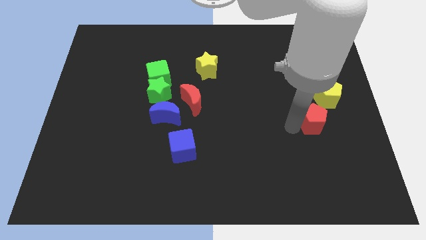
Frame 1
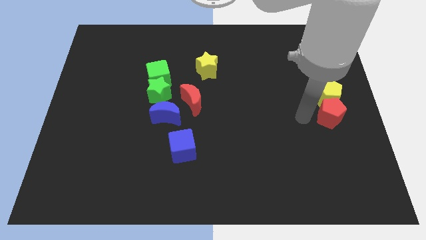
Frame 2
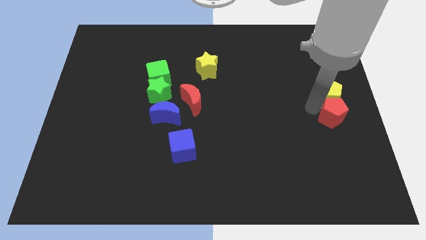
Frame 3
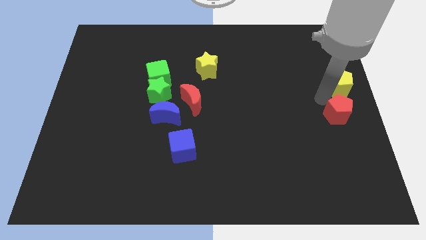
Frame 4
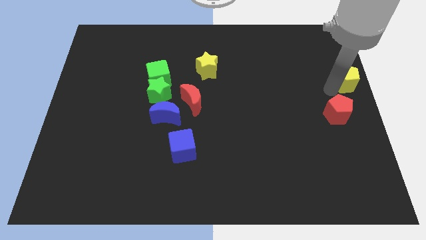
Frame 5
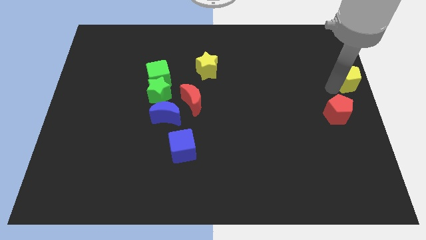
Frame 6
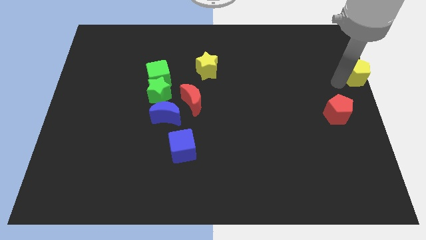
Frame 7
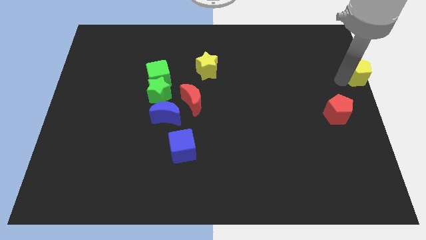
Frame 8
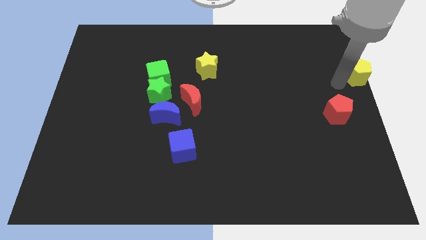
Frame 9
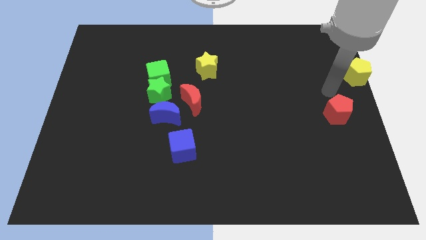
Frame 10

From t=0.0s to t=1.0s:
move the yellow pentagon parallel to the yellow star

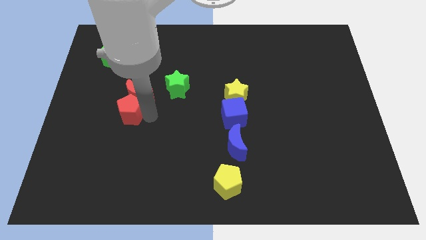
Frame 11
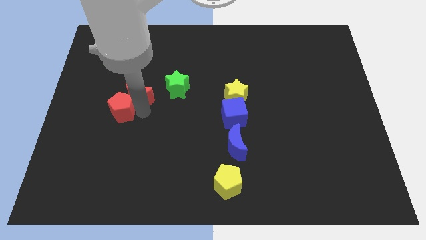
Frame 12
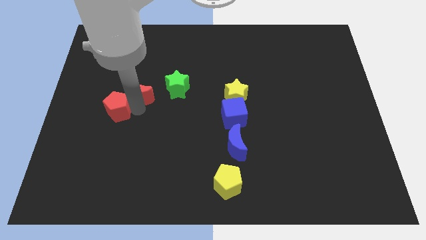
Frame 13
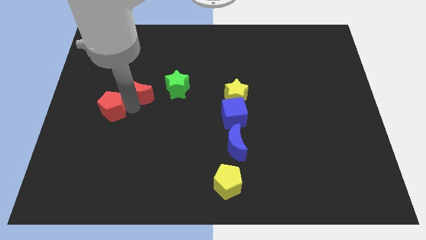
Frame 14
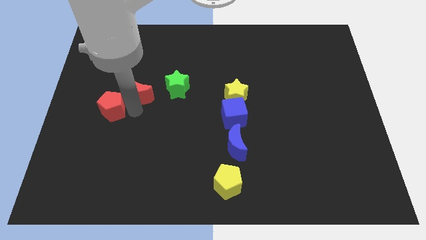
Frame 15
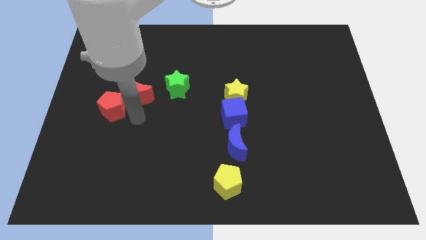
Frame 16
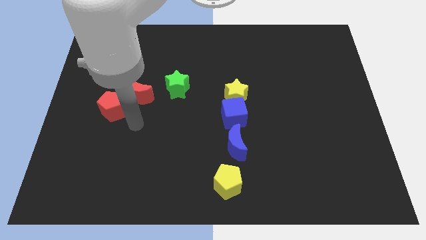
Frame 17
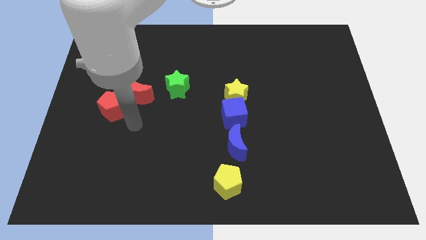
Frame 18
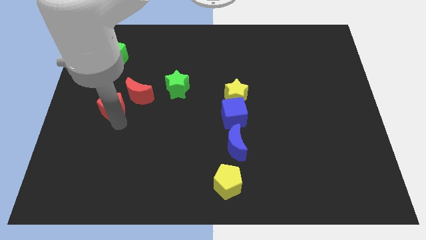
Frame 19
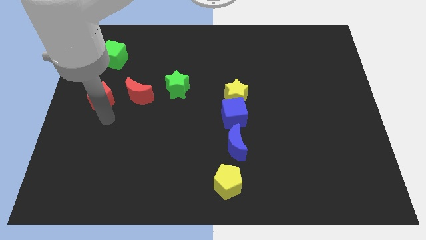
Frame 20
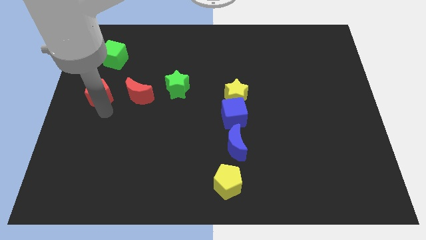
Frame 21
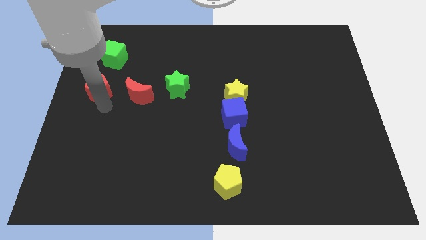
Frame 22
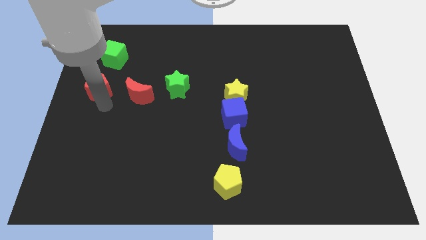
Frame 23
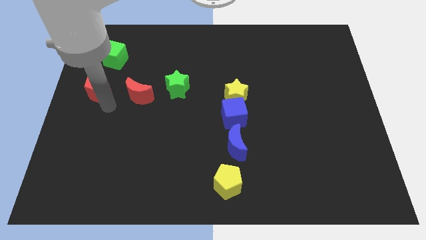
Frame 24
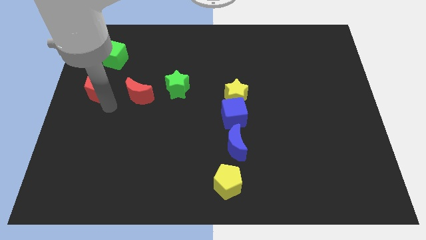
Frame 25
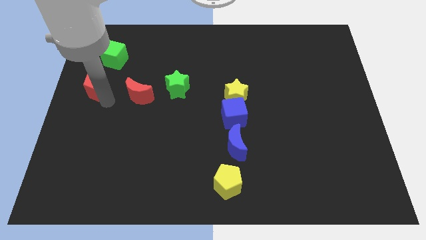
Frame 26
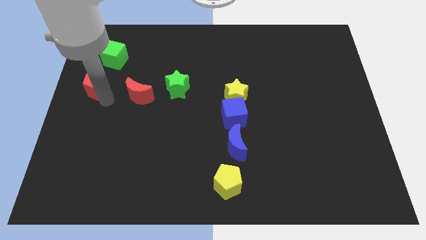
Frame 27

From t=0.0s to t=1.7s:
separate the red pentagon from the red moon

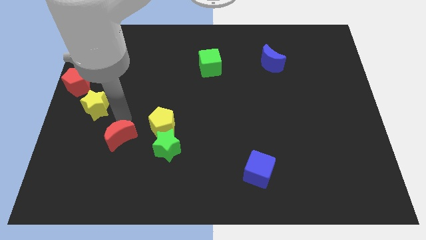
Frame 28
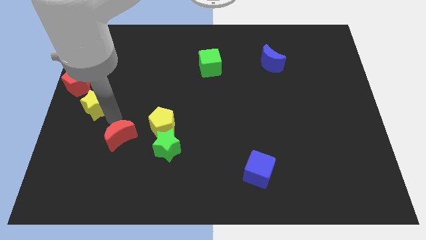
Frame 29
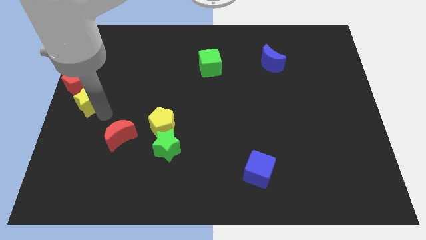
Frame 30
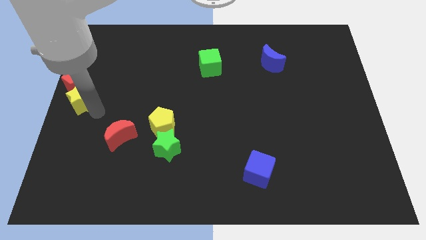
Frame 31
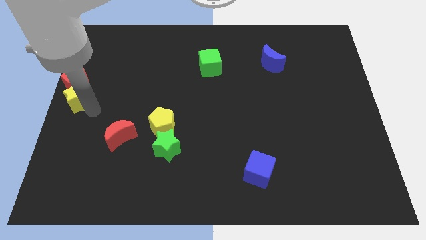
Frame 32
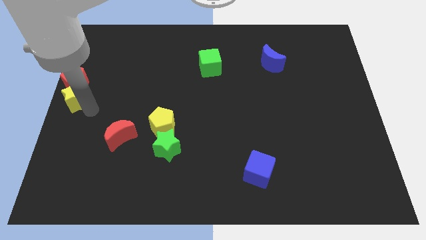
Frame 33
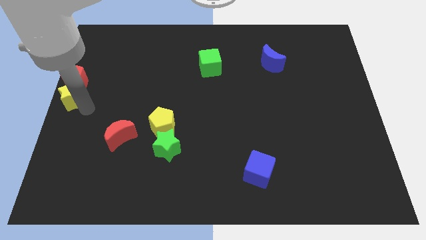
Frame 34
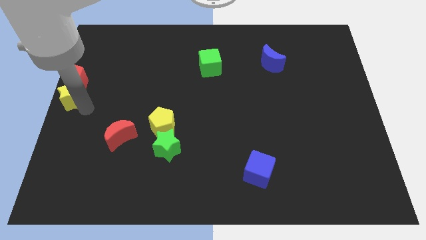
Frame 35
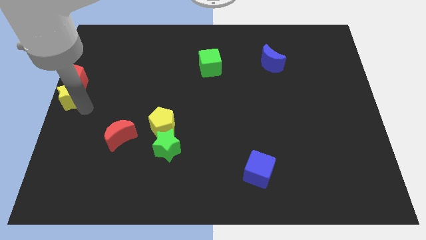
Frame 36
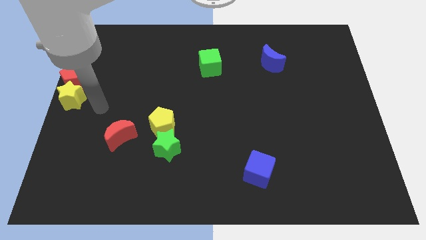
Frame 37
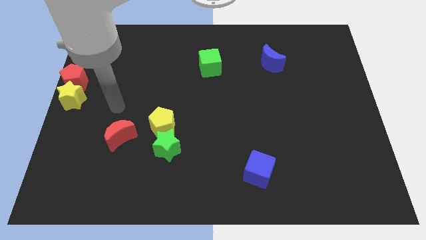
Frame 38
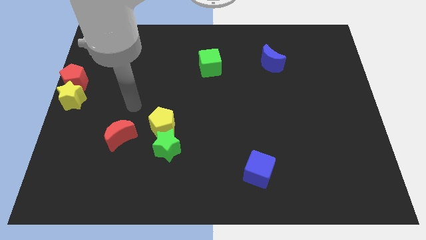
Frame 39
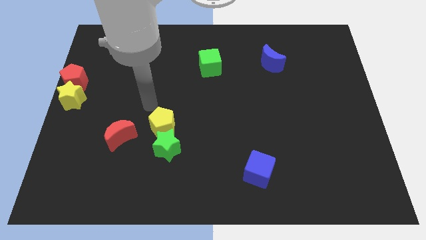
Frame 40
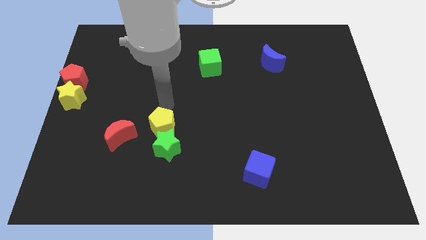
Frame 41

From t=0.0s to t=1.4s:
move the yellow star below the red pentagon

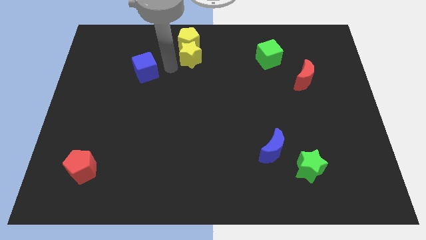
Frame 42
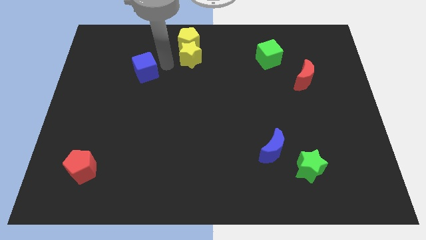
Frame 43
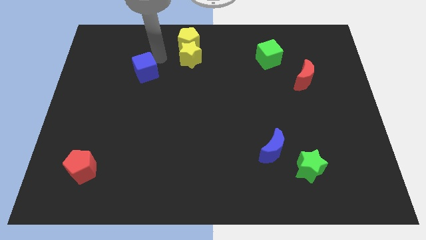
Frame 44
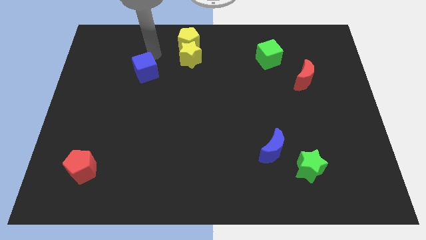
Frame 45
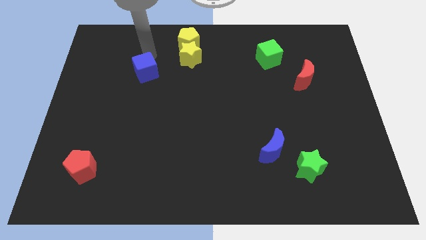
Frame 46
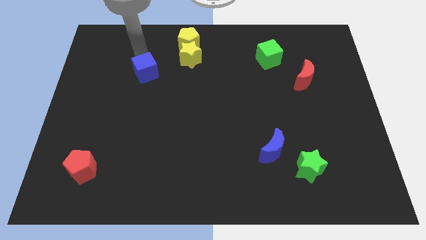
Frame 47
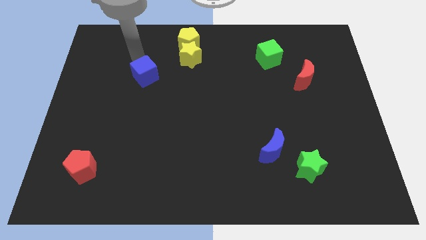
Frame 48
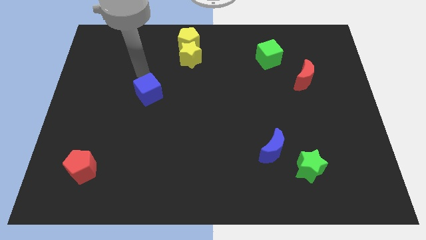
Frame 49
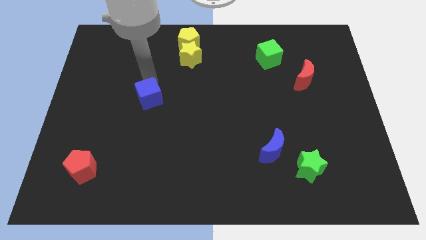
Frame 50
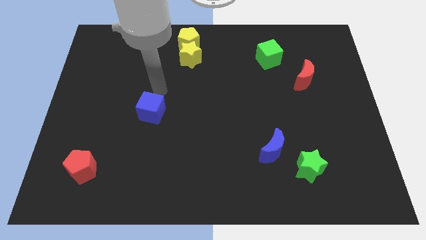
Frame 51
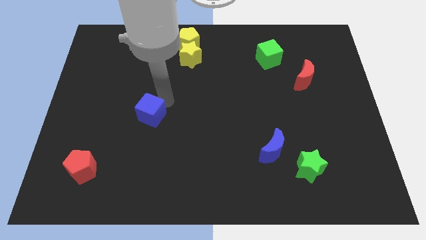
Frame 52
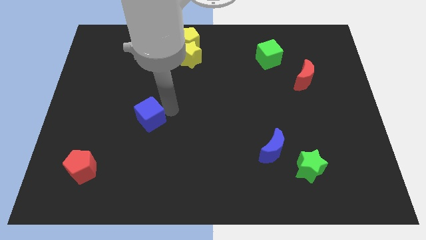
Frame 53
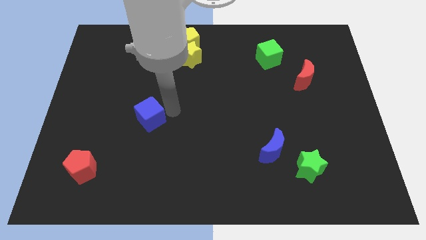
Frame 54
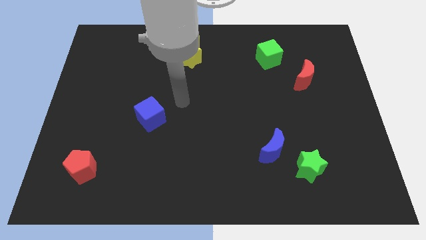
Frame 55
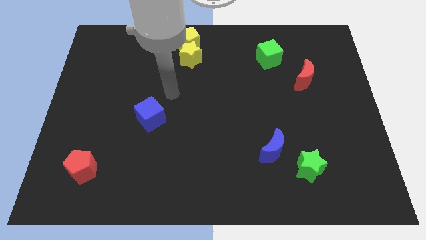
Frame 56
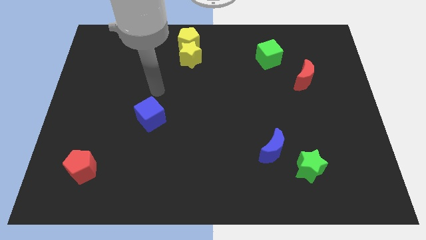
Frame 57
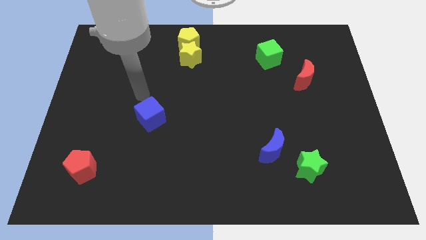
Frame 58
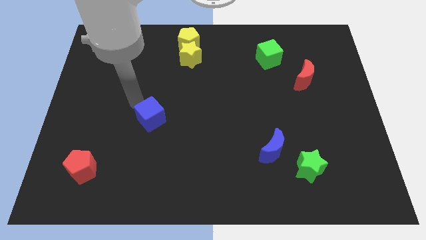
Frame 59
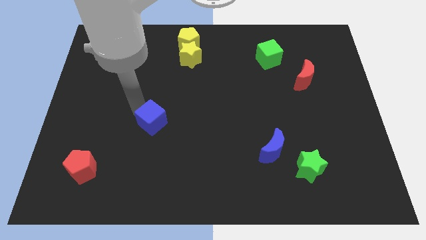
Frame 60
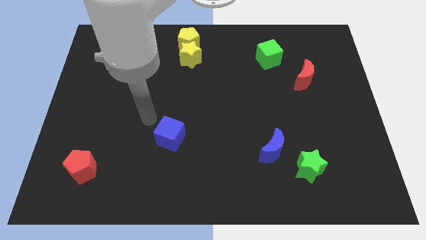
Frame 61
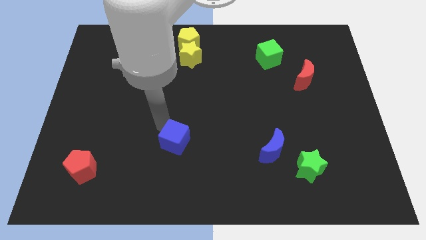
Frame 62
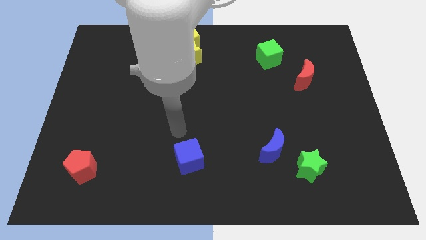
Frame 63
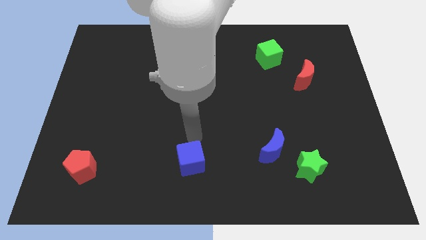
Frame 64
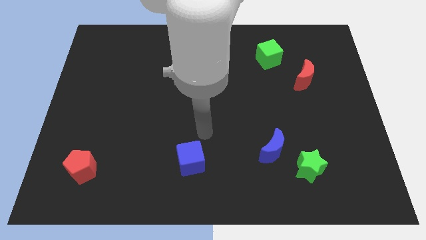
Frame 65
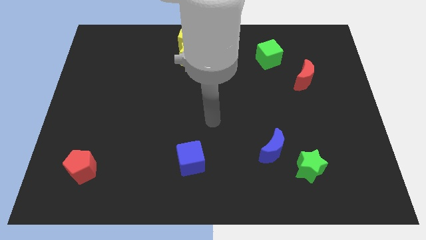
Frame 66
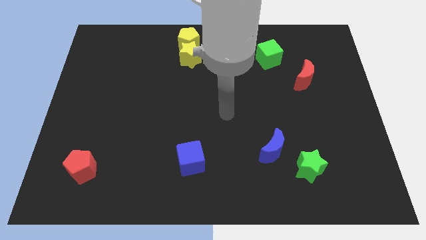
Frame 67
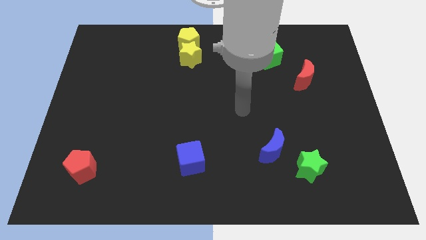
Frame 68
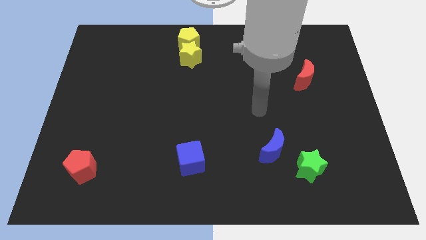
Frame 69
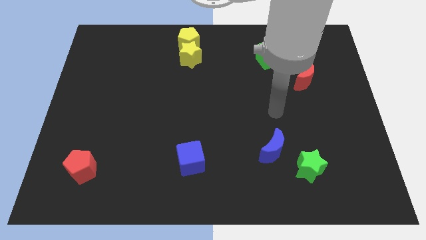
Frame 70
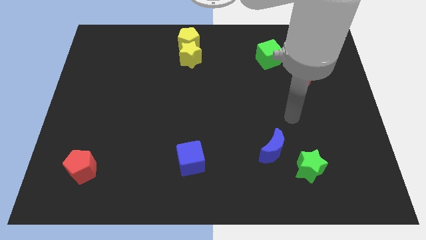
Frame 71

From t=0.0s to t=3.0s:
place the blue cube in between red pentagon and blue crescent

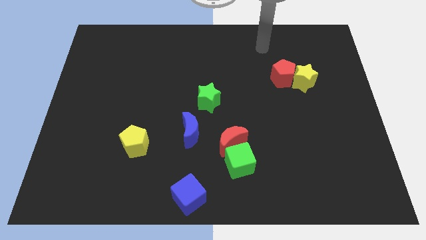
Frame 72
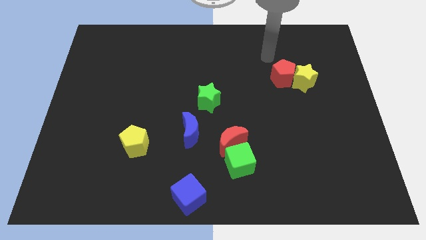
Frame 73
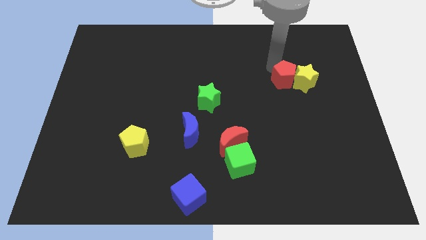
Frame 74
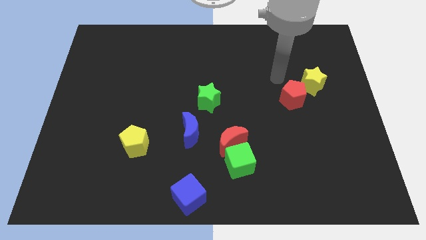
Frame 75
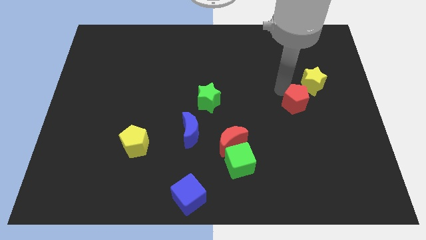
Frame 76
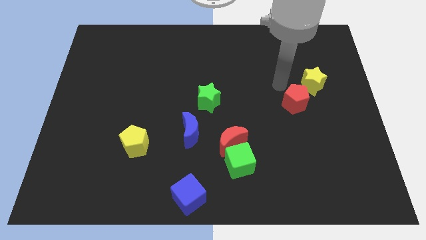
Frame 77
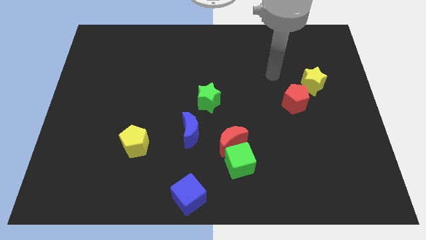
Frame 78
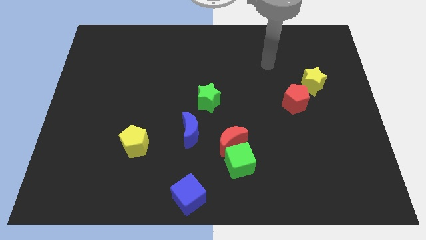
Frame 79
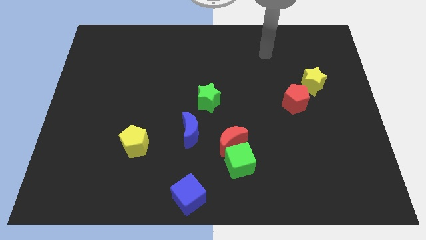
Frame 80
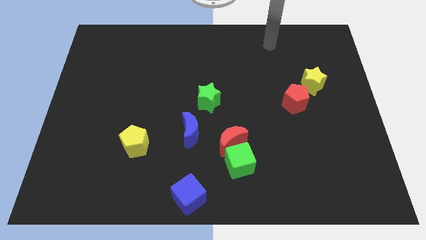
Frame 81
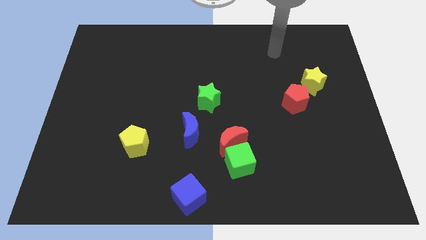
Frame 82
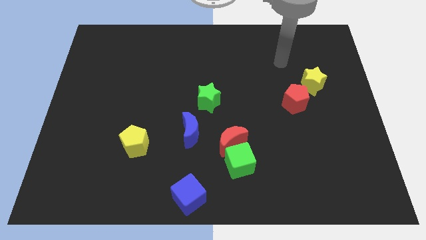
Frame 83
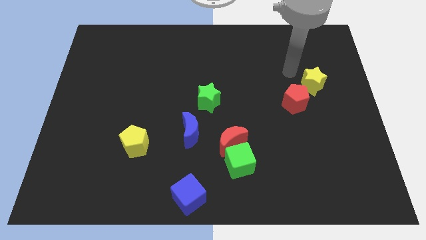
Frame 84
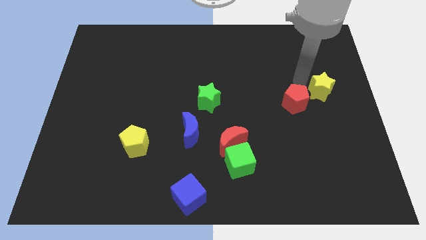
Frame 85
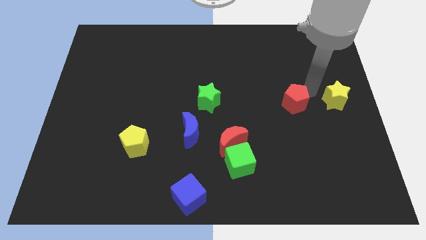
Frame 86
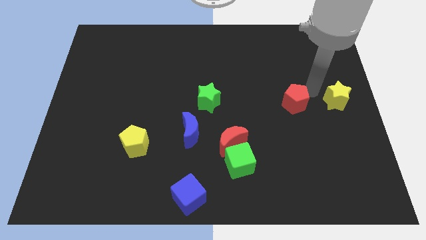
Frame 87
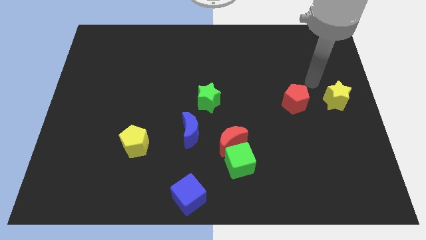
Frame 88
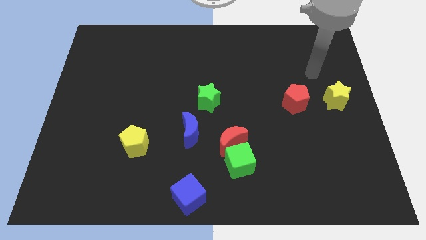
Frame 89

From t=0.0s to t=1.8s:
separate the red pentagon and the yellow star
